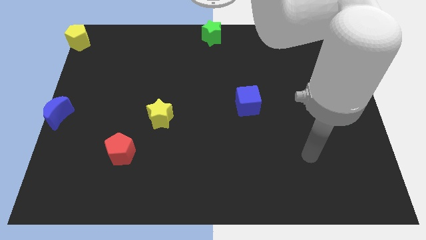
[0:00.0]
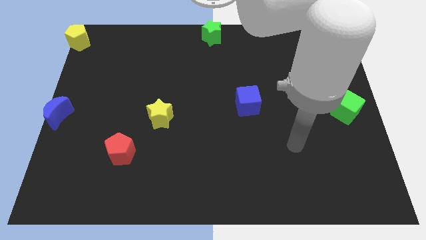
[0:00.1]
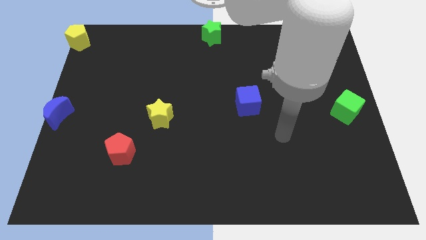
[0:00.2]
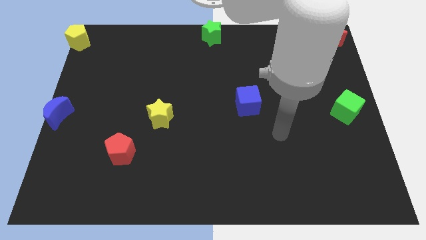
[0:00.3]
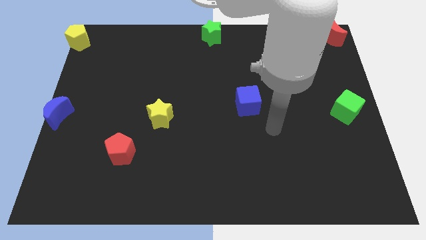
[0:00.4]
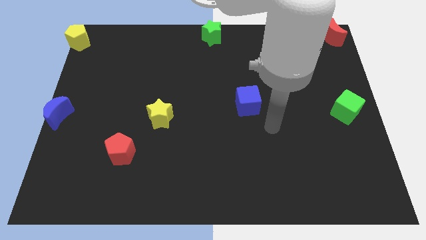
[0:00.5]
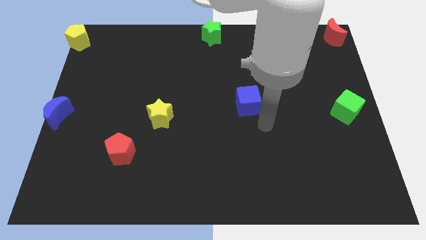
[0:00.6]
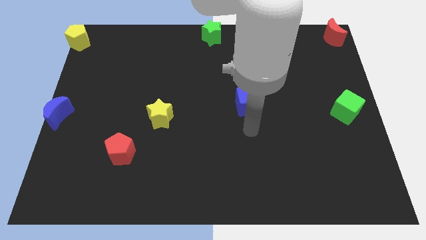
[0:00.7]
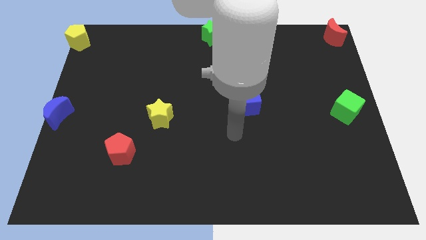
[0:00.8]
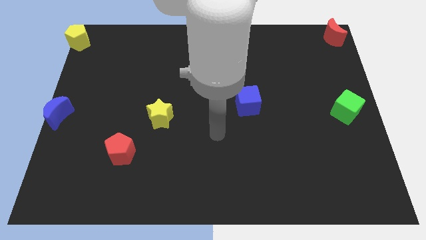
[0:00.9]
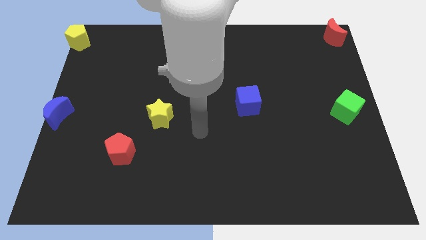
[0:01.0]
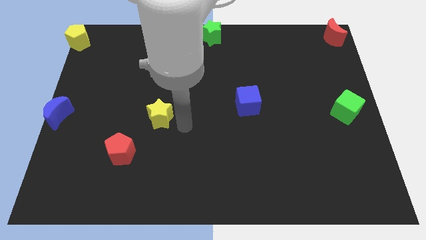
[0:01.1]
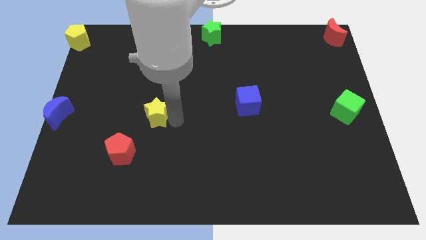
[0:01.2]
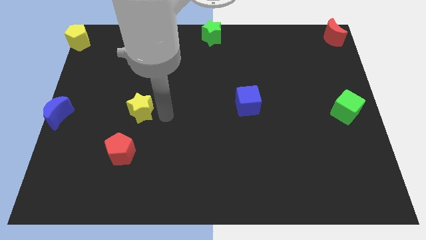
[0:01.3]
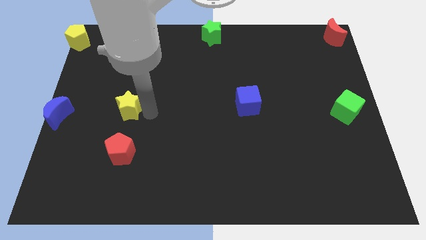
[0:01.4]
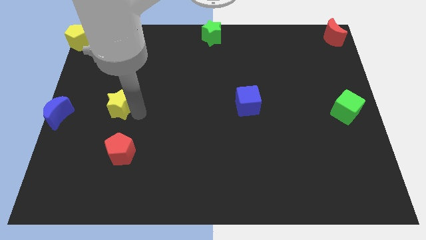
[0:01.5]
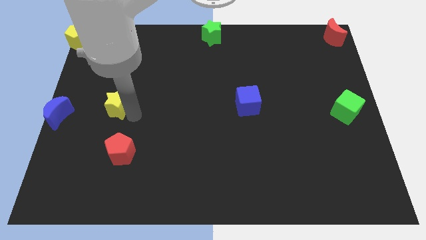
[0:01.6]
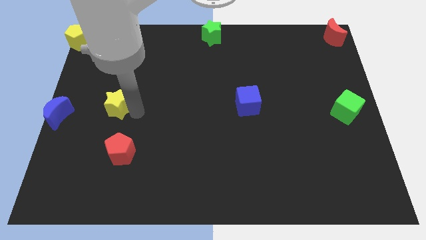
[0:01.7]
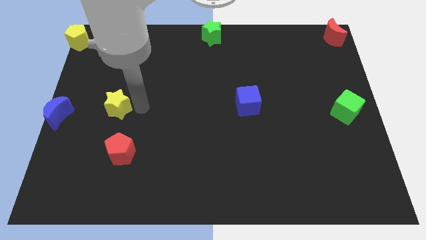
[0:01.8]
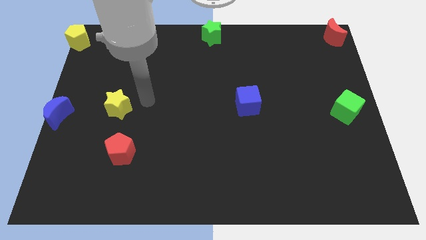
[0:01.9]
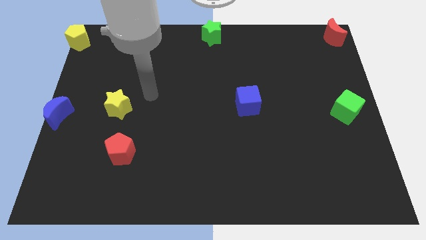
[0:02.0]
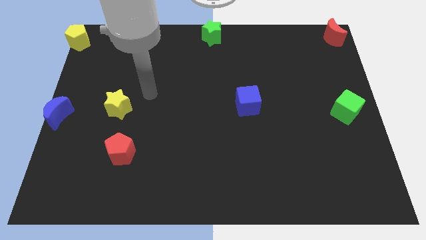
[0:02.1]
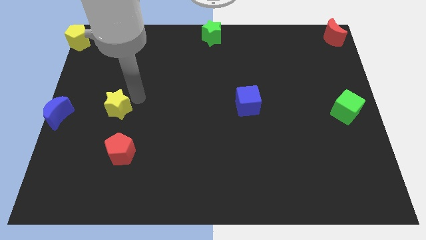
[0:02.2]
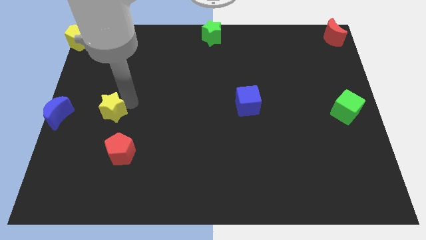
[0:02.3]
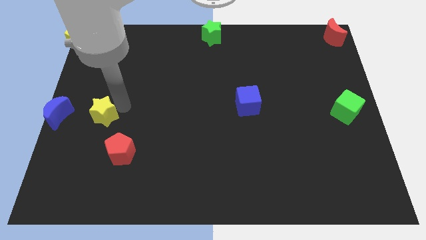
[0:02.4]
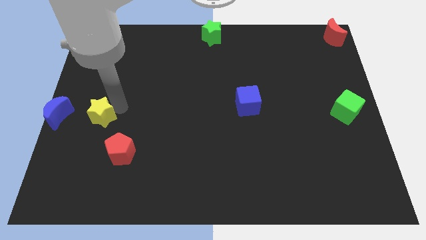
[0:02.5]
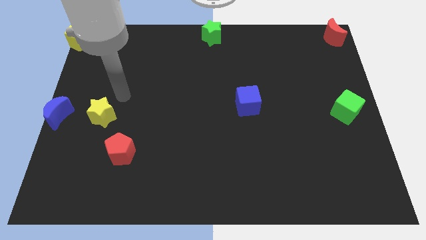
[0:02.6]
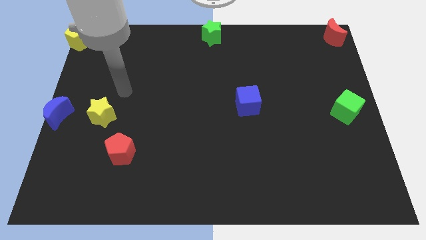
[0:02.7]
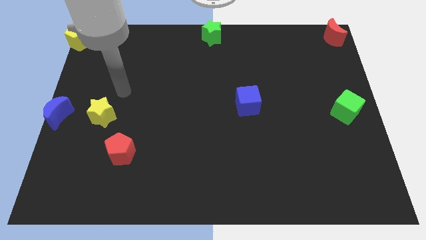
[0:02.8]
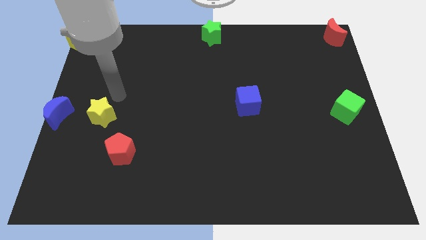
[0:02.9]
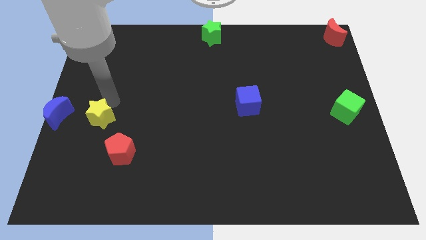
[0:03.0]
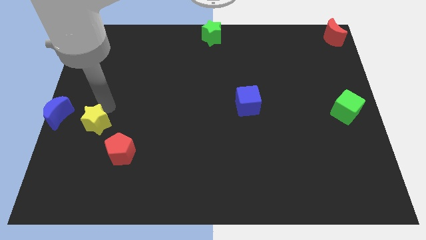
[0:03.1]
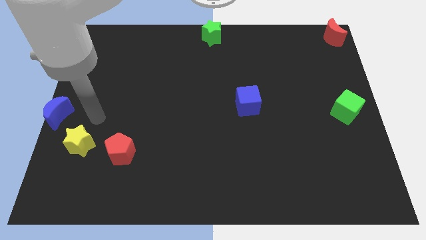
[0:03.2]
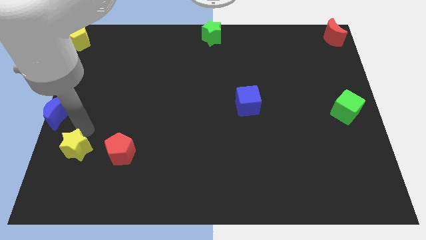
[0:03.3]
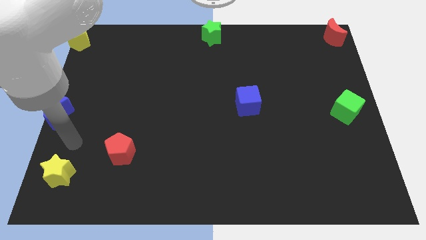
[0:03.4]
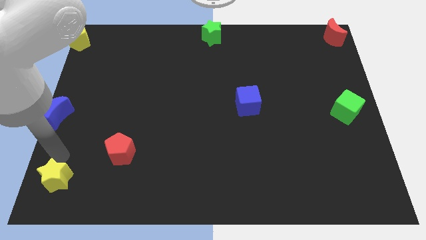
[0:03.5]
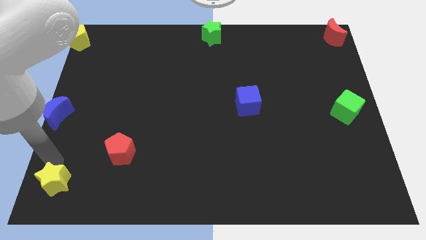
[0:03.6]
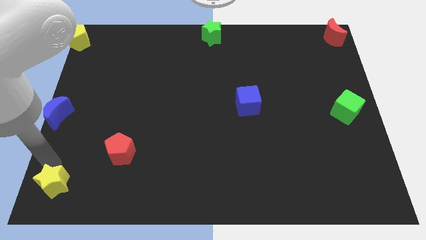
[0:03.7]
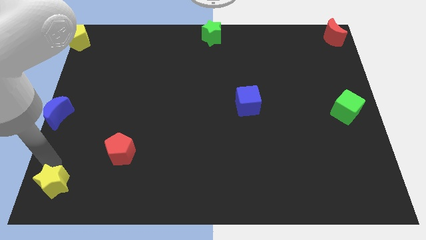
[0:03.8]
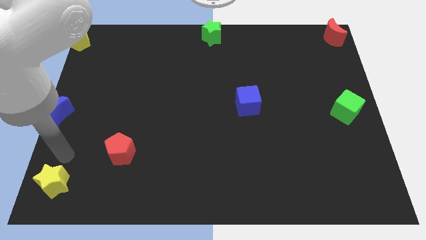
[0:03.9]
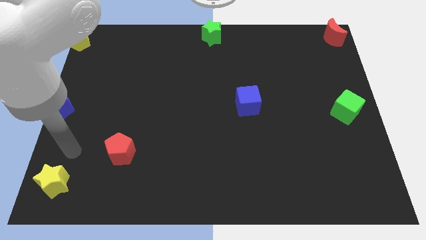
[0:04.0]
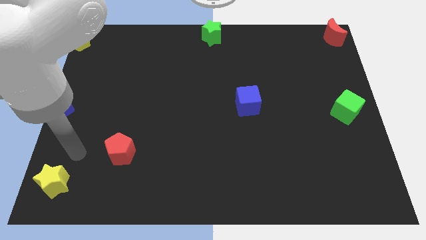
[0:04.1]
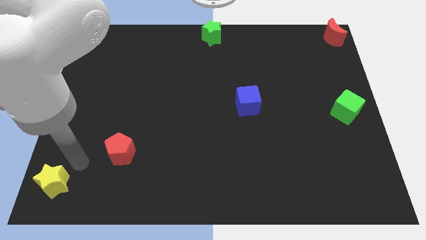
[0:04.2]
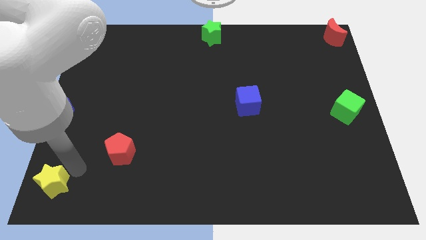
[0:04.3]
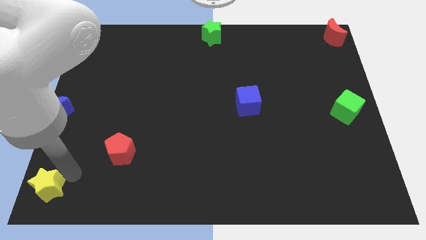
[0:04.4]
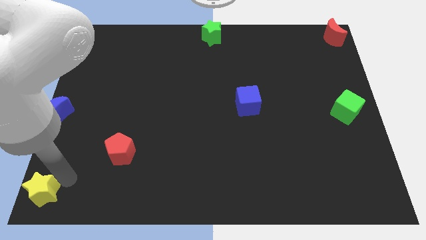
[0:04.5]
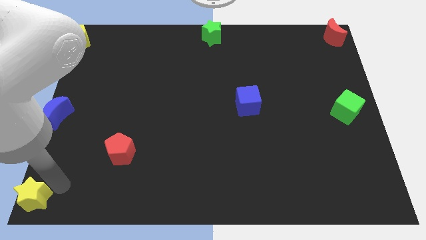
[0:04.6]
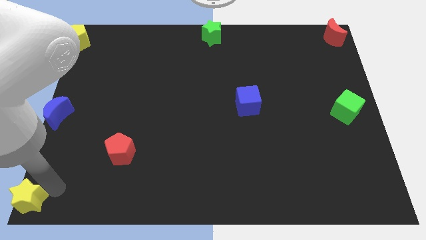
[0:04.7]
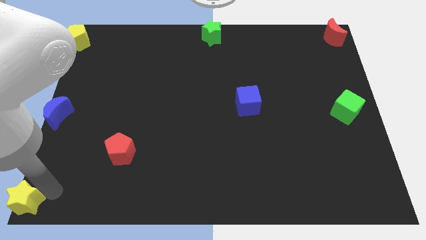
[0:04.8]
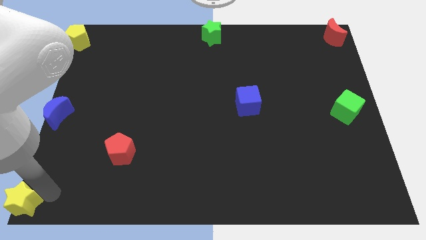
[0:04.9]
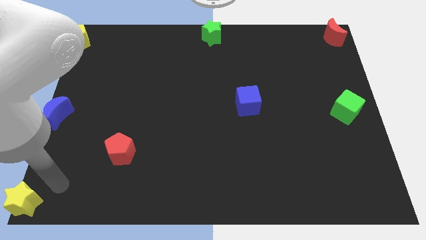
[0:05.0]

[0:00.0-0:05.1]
push the yellow star to the bottom left corner of the board

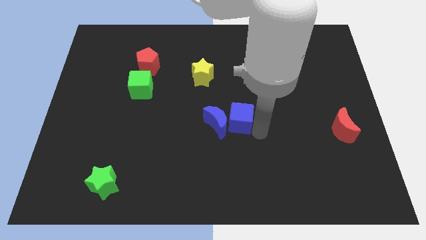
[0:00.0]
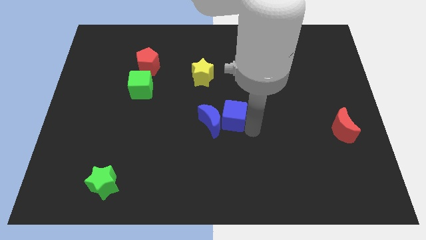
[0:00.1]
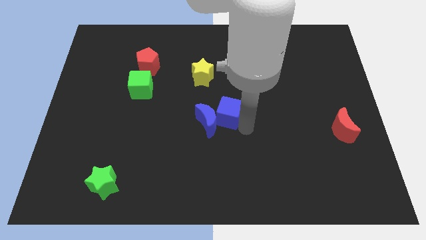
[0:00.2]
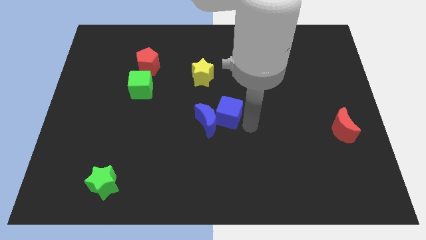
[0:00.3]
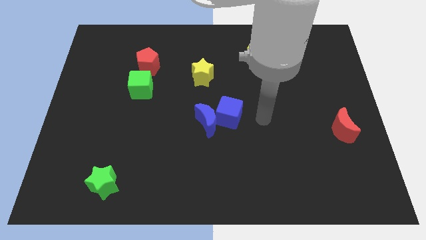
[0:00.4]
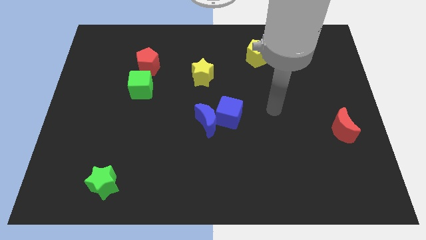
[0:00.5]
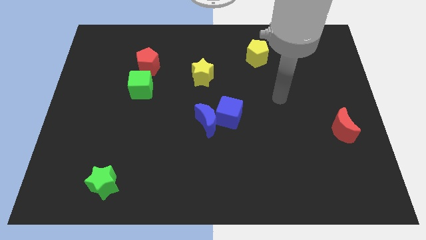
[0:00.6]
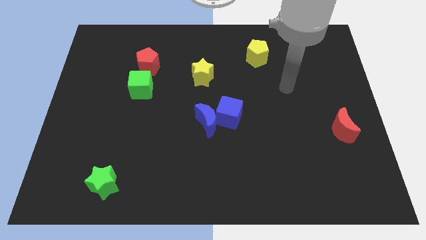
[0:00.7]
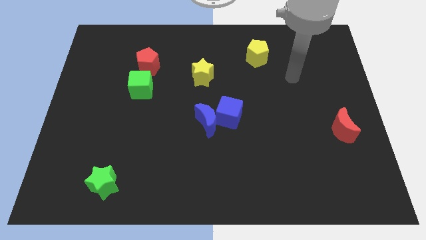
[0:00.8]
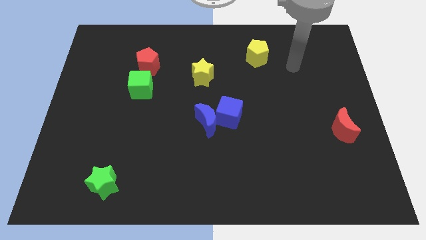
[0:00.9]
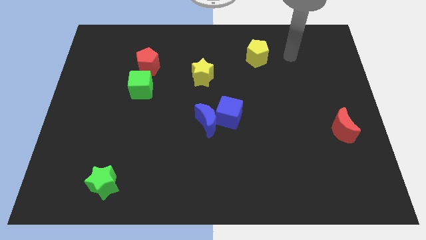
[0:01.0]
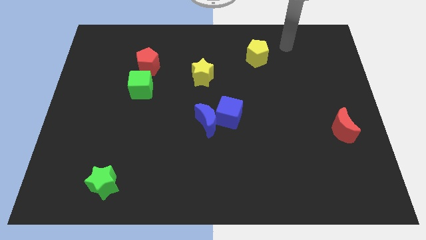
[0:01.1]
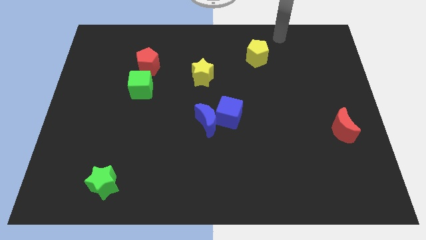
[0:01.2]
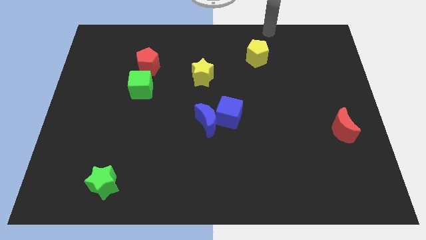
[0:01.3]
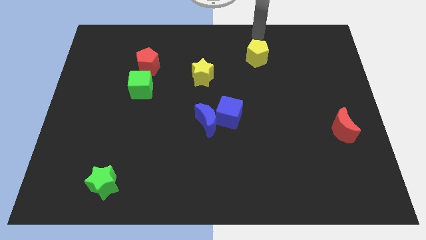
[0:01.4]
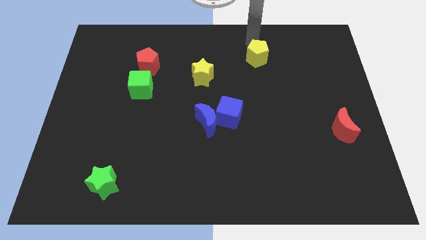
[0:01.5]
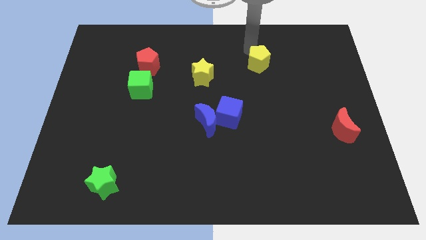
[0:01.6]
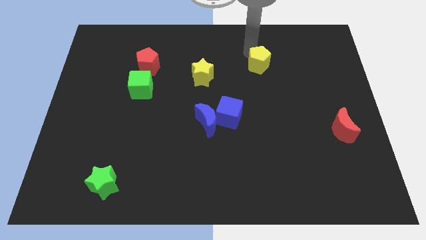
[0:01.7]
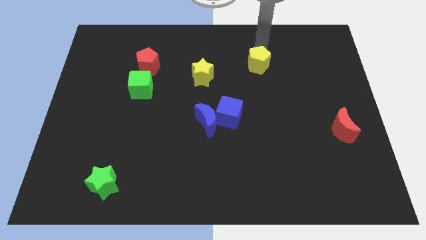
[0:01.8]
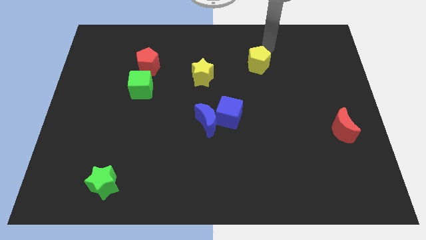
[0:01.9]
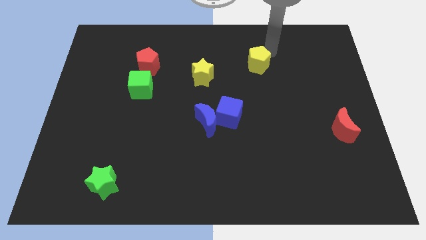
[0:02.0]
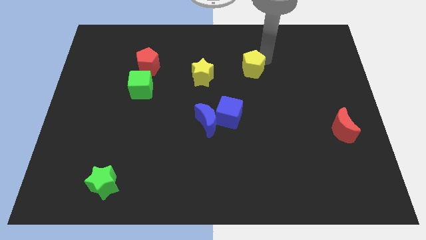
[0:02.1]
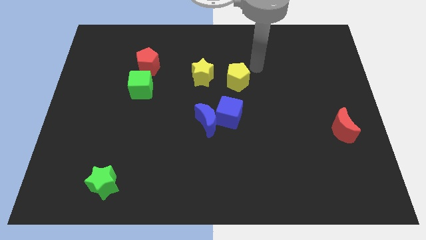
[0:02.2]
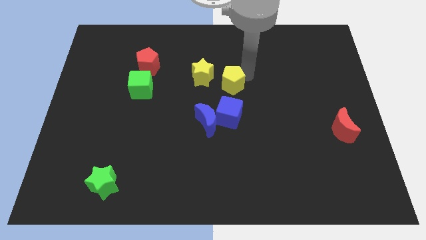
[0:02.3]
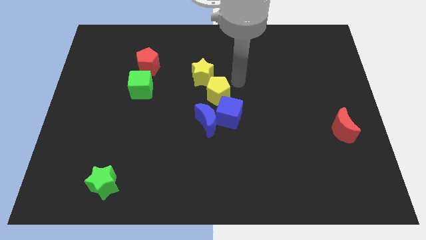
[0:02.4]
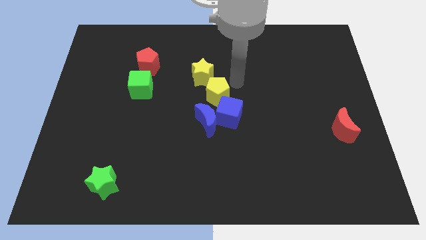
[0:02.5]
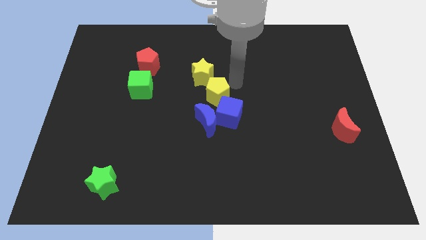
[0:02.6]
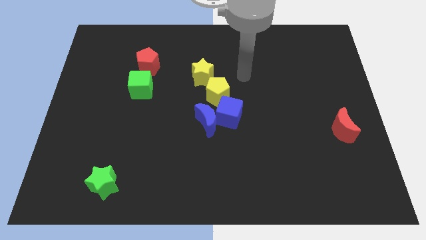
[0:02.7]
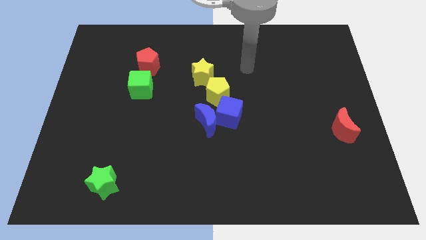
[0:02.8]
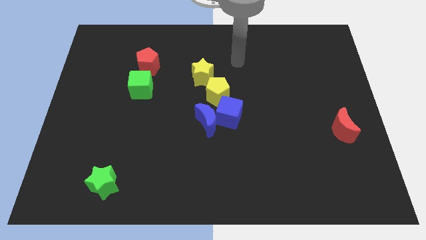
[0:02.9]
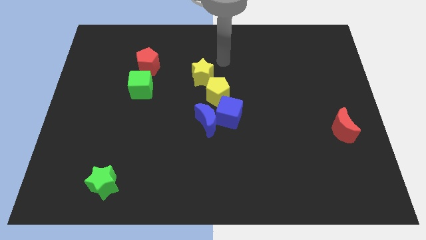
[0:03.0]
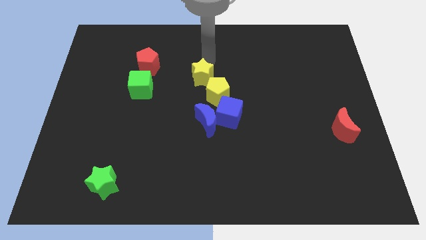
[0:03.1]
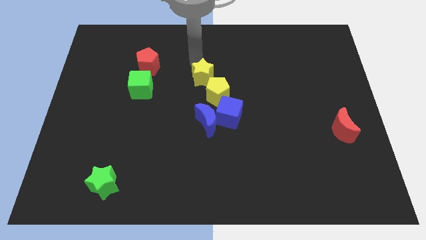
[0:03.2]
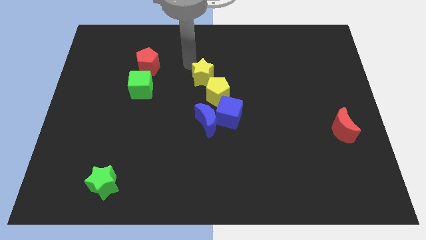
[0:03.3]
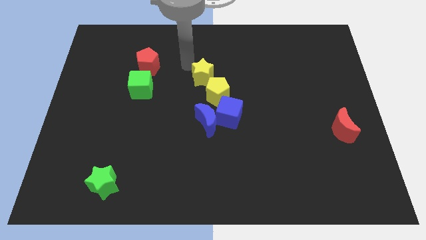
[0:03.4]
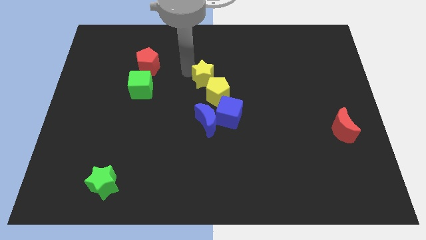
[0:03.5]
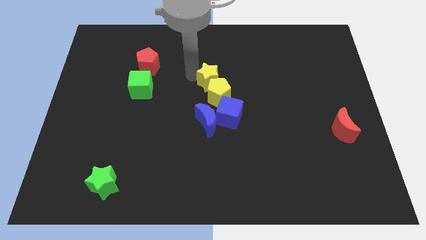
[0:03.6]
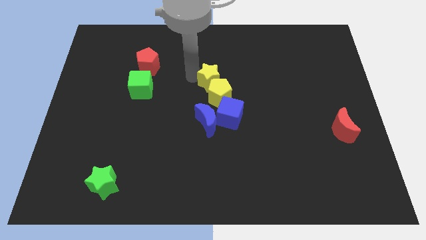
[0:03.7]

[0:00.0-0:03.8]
place the yellow pentagon above the blue cube

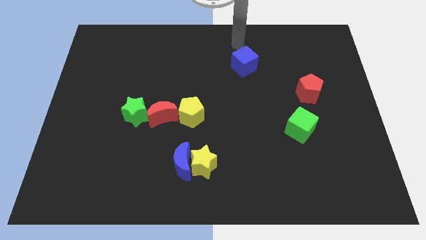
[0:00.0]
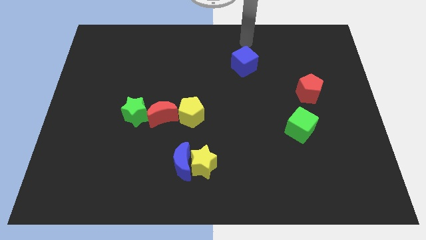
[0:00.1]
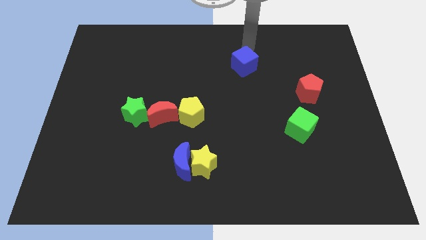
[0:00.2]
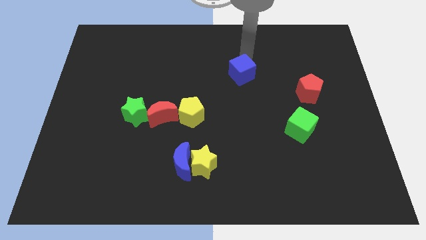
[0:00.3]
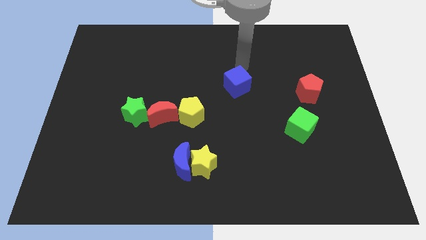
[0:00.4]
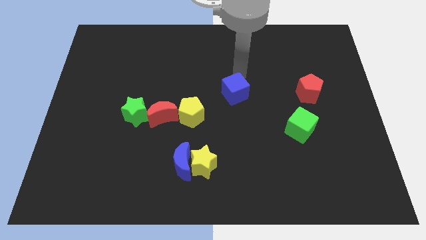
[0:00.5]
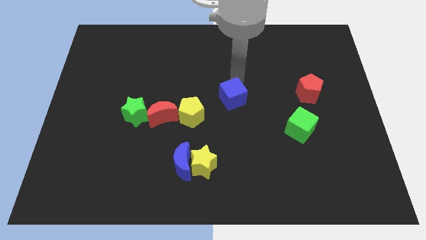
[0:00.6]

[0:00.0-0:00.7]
push the blue cube to the bottom of the board
